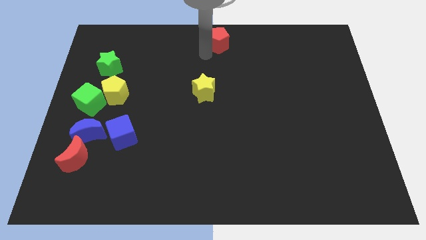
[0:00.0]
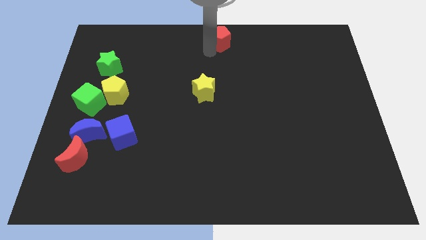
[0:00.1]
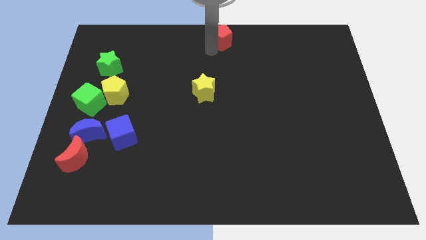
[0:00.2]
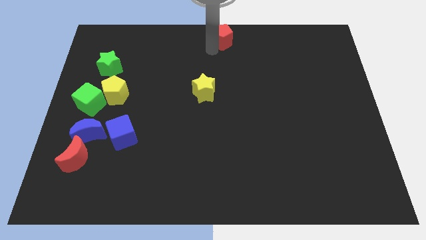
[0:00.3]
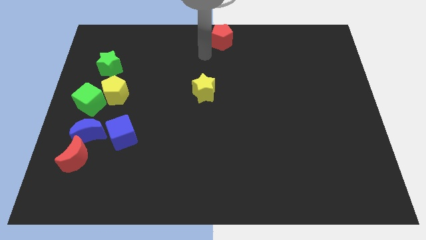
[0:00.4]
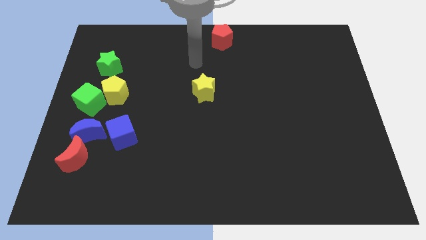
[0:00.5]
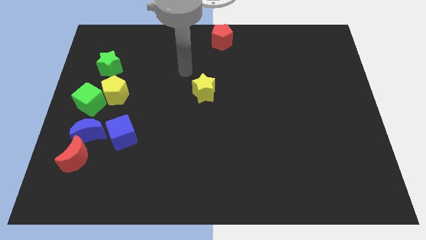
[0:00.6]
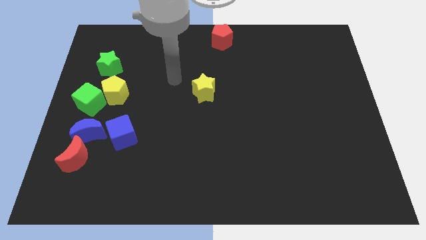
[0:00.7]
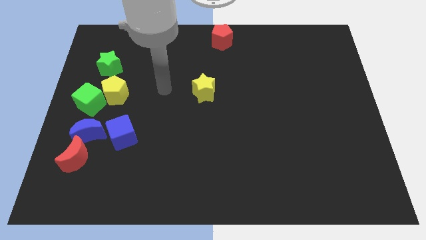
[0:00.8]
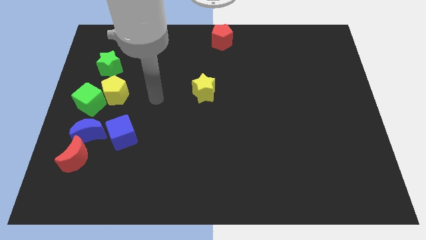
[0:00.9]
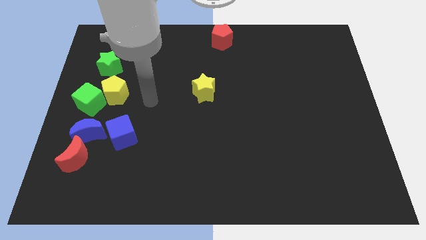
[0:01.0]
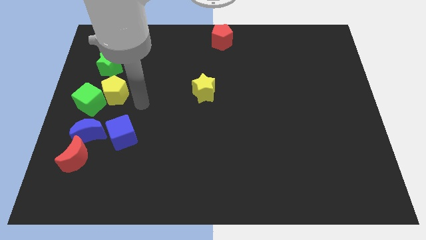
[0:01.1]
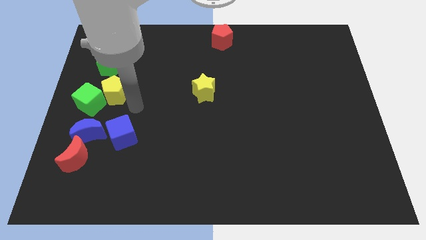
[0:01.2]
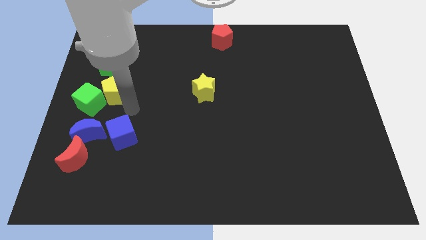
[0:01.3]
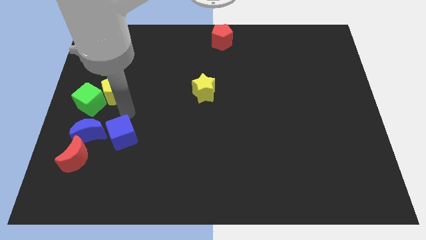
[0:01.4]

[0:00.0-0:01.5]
place the red pentagon diagonally to yellow pentagon

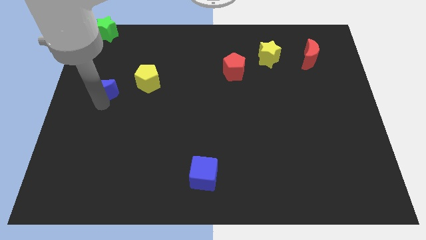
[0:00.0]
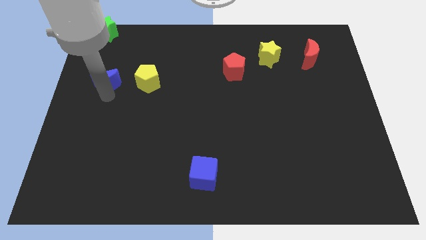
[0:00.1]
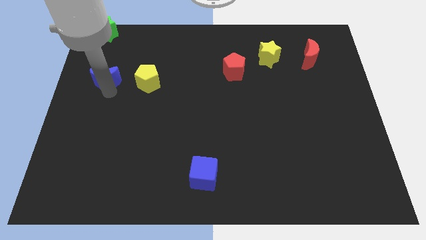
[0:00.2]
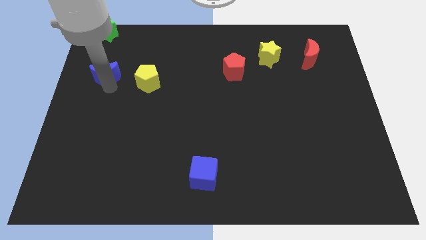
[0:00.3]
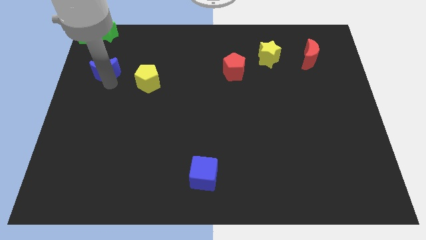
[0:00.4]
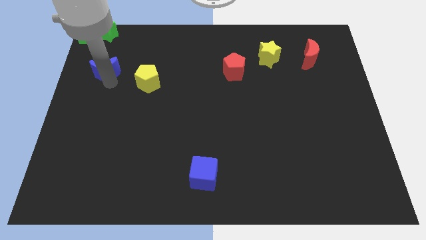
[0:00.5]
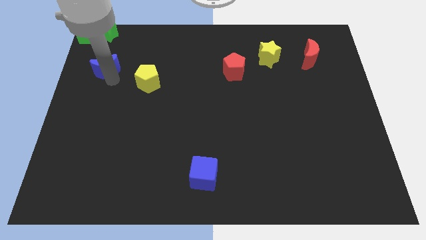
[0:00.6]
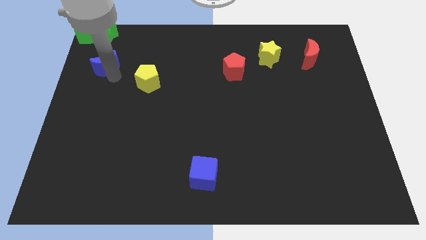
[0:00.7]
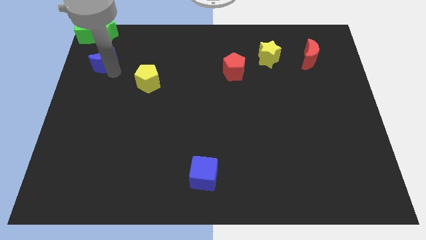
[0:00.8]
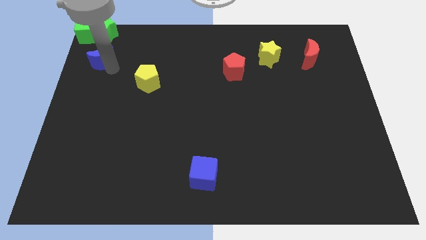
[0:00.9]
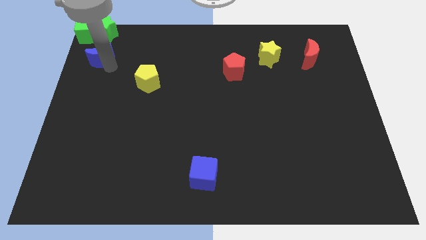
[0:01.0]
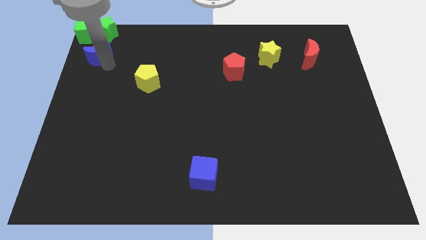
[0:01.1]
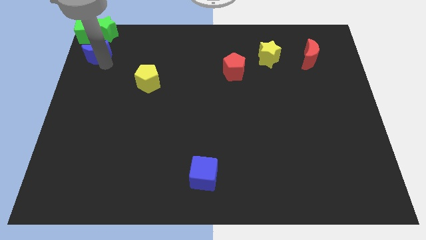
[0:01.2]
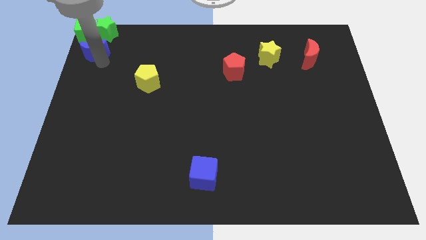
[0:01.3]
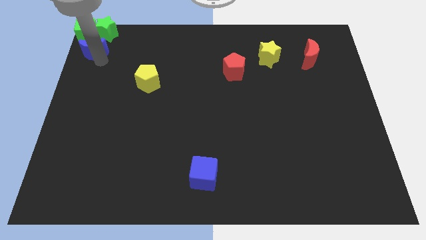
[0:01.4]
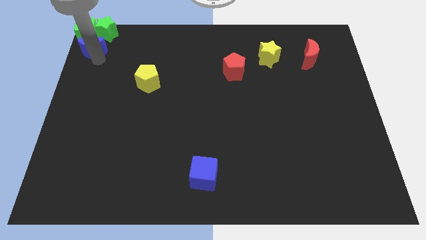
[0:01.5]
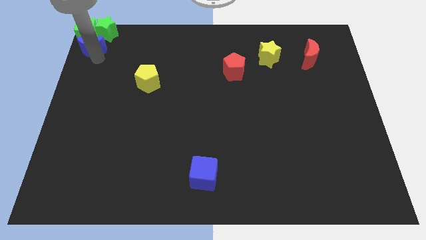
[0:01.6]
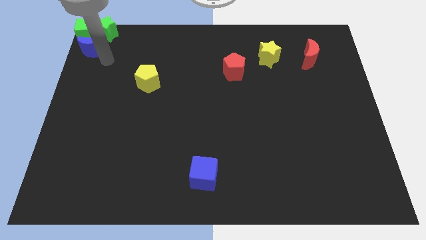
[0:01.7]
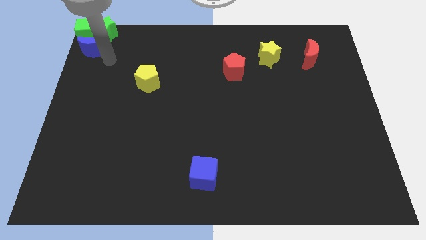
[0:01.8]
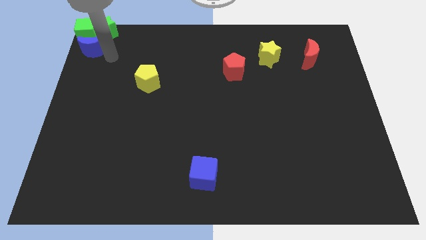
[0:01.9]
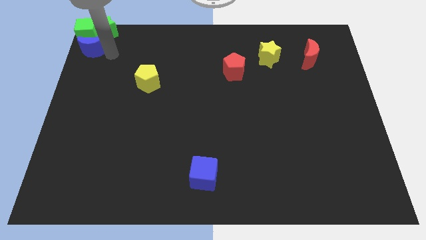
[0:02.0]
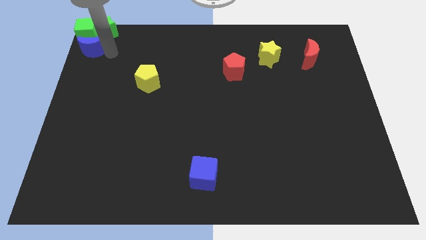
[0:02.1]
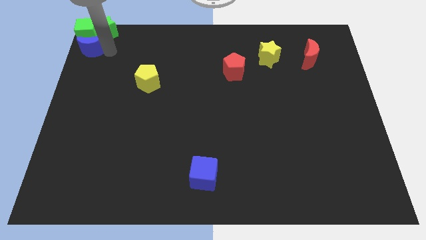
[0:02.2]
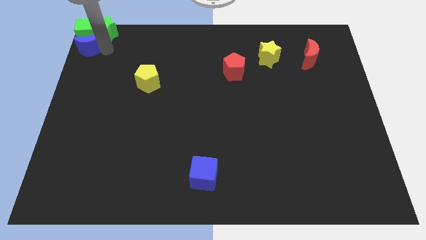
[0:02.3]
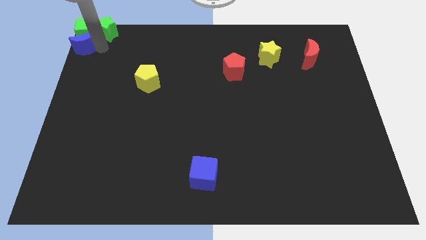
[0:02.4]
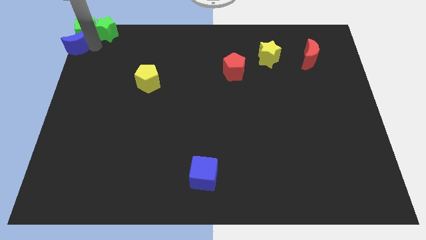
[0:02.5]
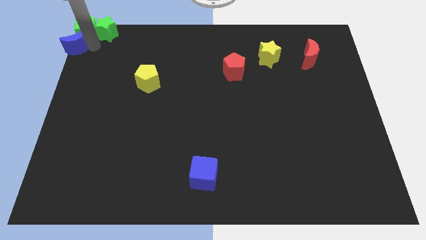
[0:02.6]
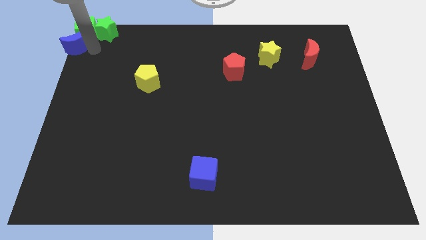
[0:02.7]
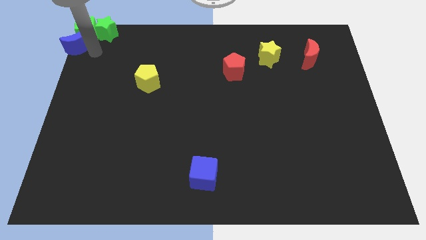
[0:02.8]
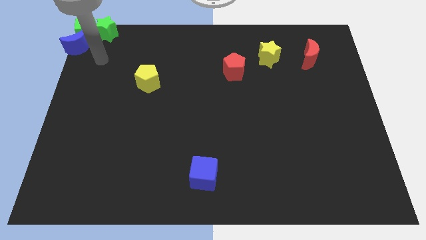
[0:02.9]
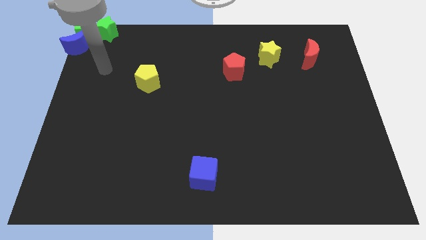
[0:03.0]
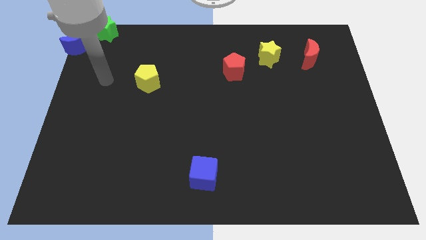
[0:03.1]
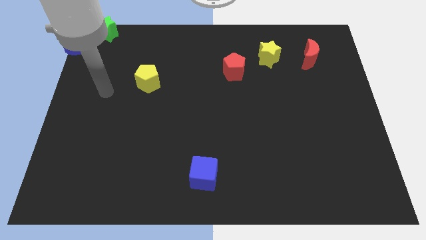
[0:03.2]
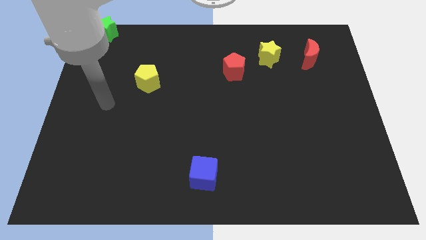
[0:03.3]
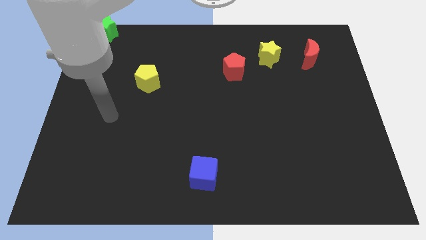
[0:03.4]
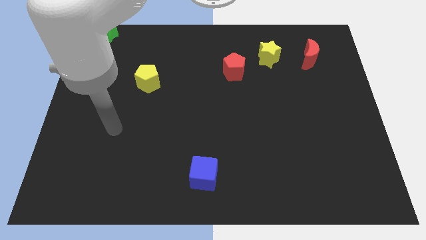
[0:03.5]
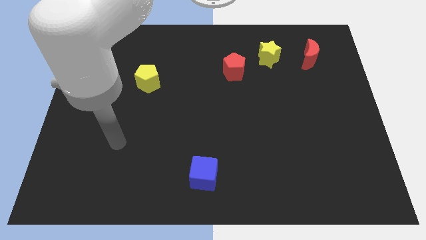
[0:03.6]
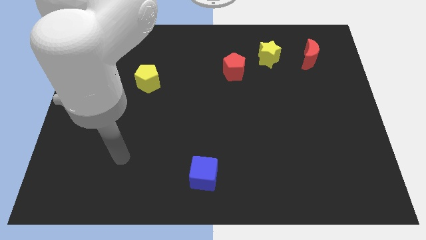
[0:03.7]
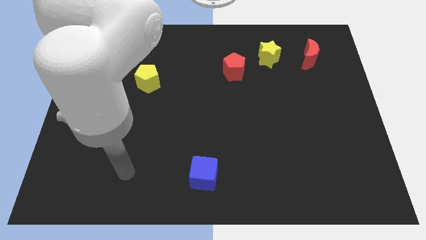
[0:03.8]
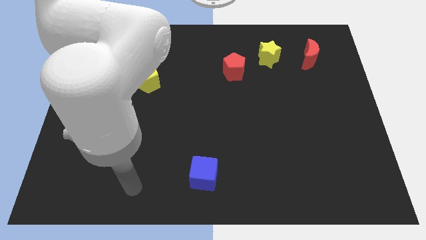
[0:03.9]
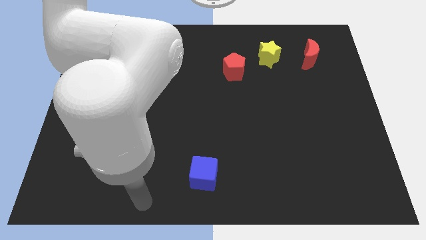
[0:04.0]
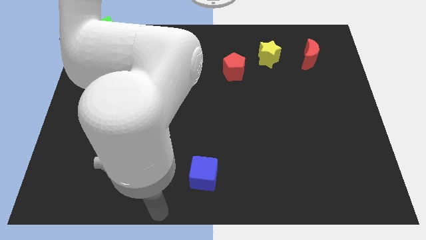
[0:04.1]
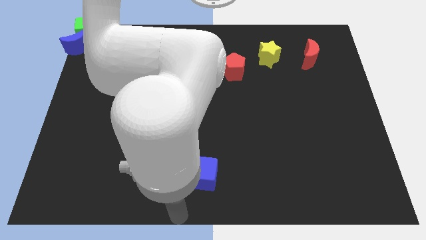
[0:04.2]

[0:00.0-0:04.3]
put the blue moon at the bottom side of the green cube

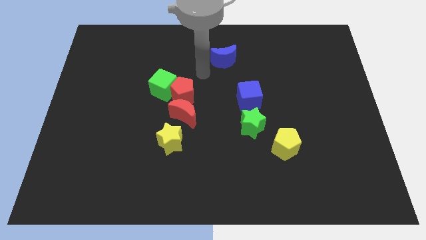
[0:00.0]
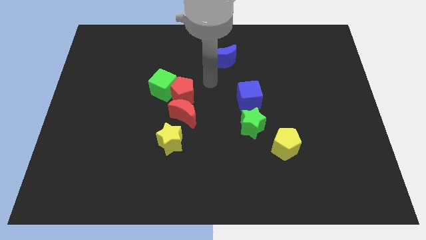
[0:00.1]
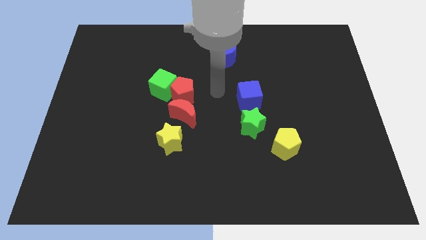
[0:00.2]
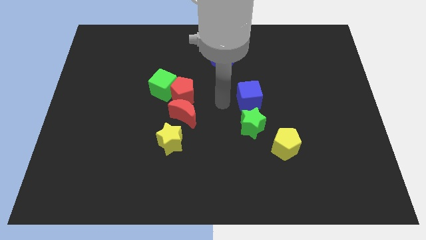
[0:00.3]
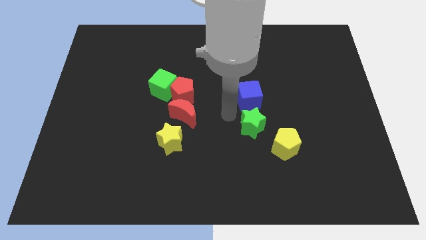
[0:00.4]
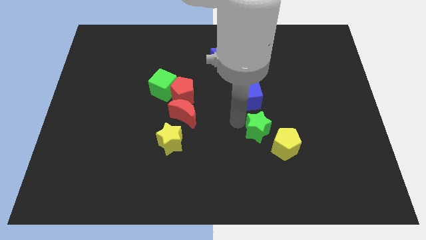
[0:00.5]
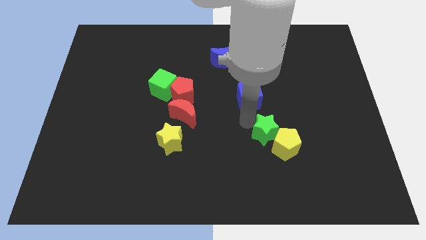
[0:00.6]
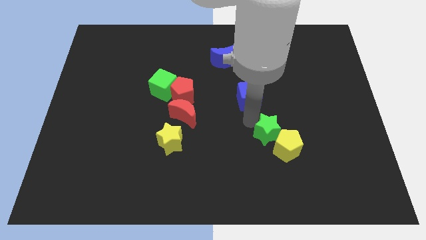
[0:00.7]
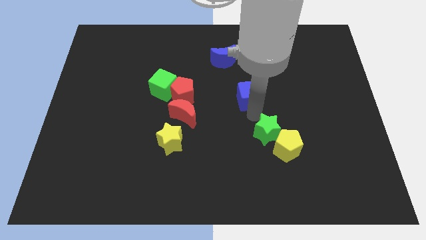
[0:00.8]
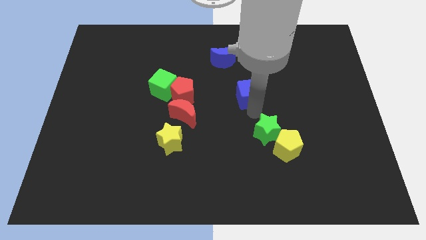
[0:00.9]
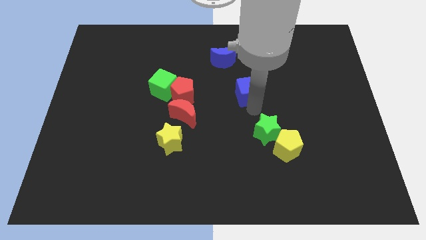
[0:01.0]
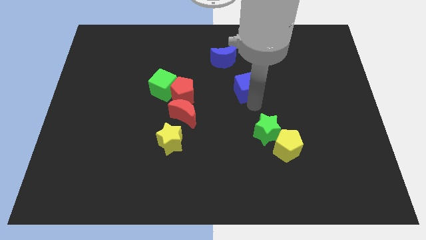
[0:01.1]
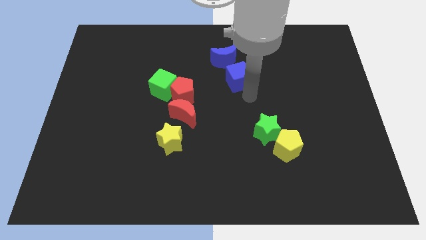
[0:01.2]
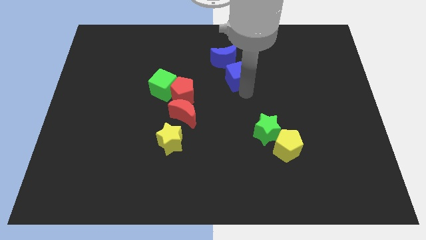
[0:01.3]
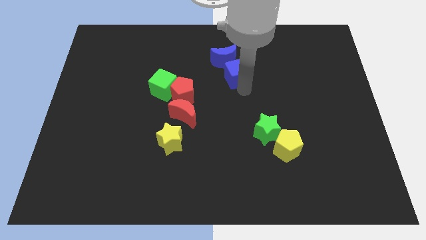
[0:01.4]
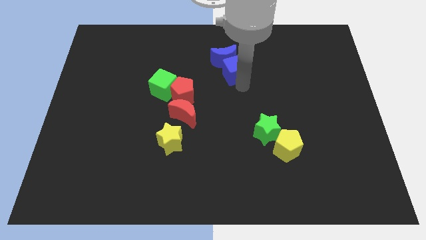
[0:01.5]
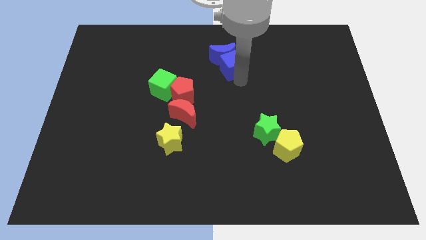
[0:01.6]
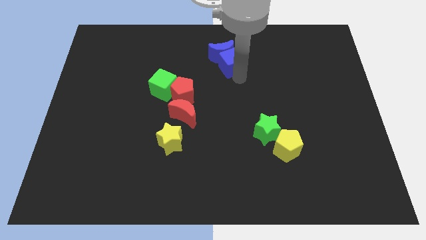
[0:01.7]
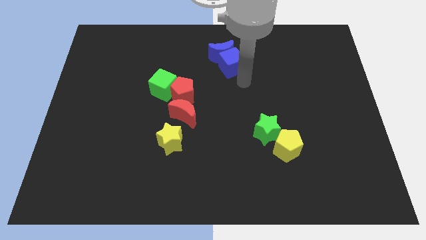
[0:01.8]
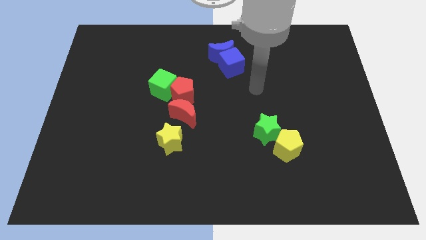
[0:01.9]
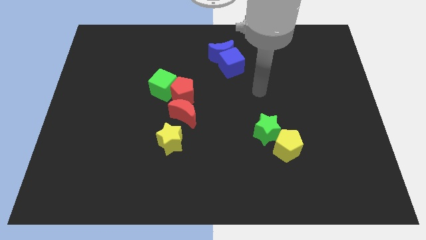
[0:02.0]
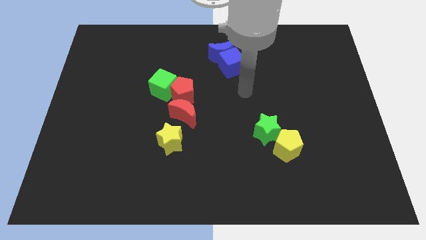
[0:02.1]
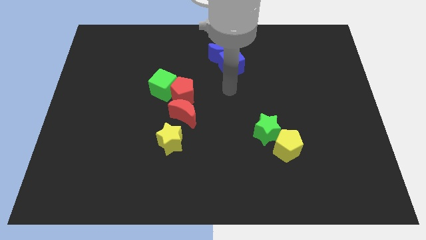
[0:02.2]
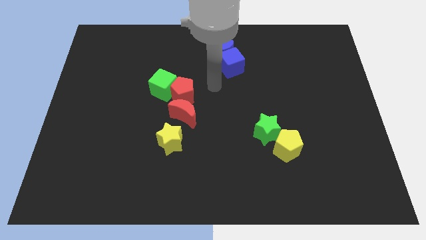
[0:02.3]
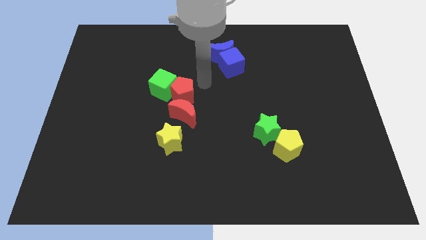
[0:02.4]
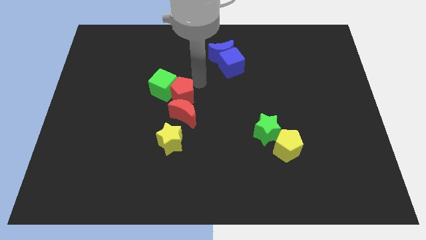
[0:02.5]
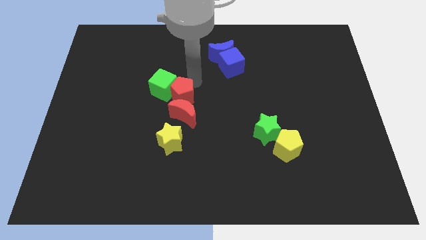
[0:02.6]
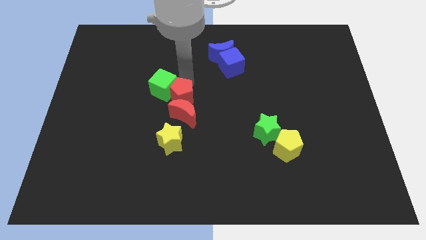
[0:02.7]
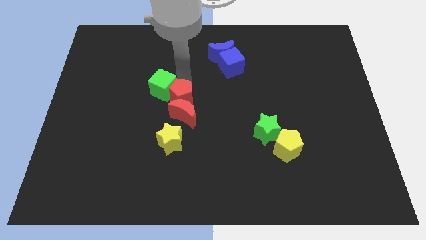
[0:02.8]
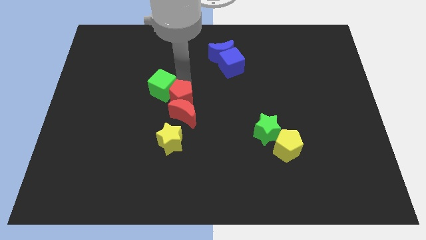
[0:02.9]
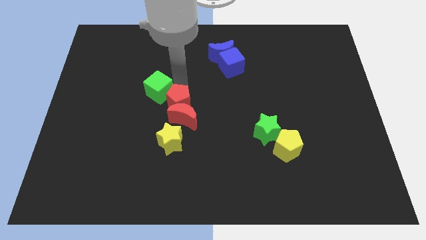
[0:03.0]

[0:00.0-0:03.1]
move the blue cube into the bottom side of the blue crescent

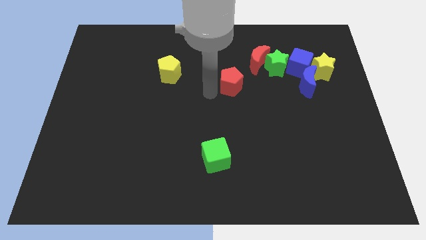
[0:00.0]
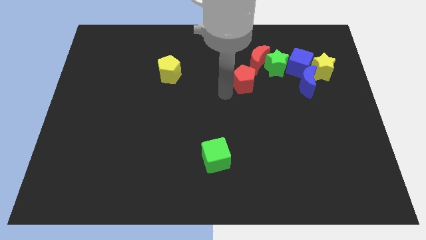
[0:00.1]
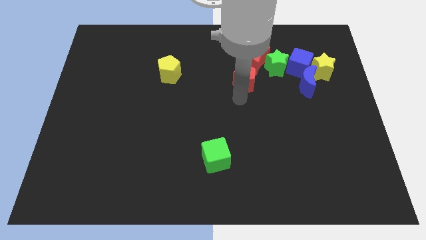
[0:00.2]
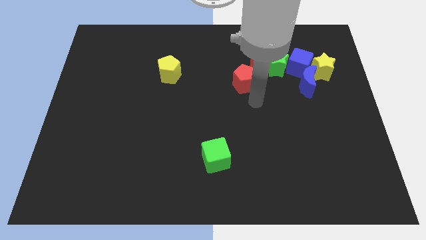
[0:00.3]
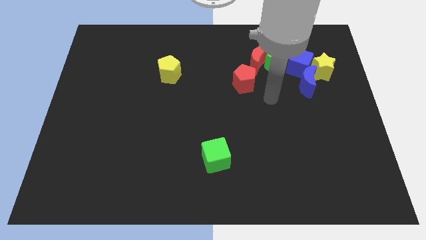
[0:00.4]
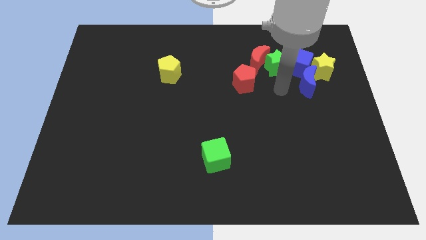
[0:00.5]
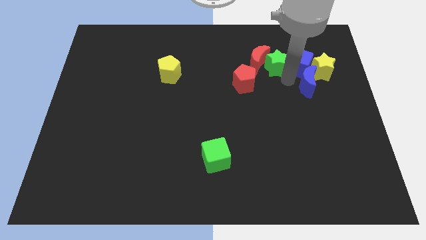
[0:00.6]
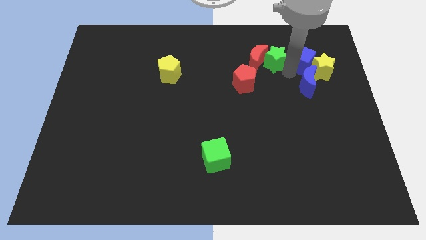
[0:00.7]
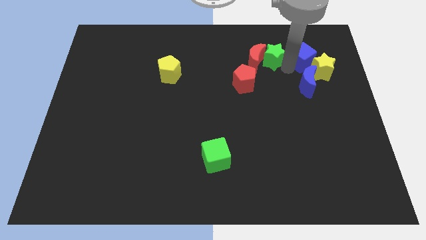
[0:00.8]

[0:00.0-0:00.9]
push the red pentagon to the right
